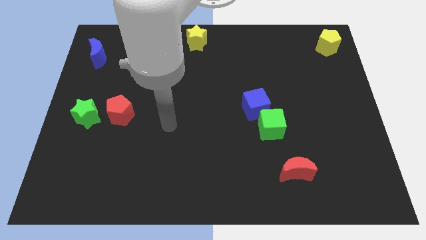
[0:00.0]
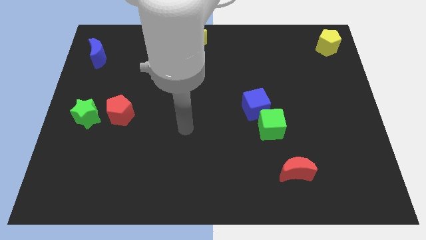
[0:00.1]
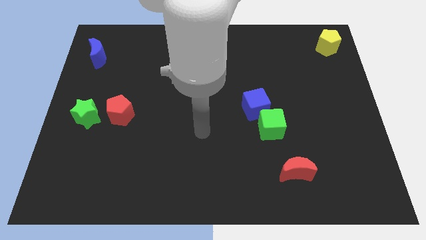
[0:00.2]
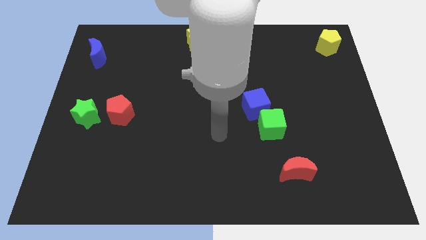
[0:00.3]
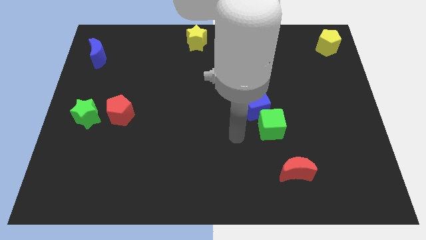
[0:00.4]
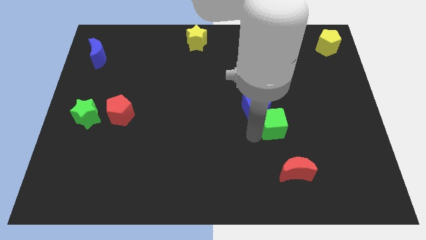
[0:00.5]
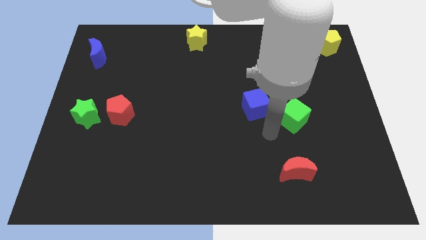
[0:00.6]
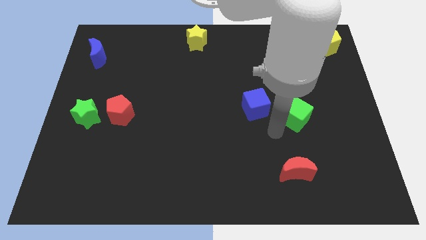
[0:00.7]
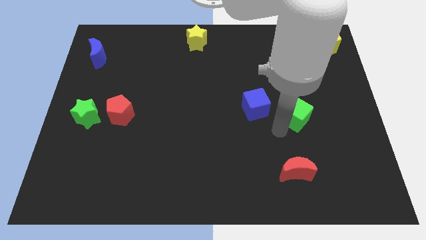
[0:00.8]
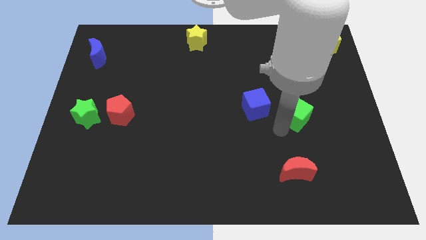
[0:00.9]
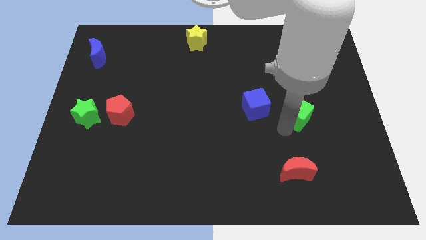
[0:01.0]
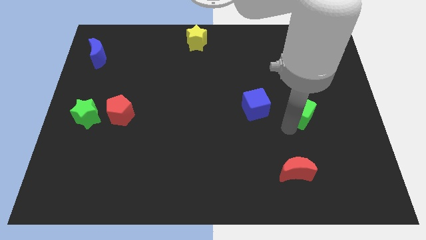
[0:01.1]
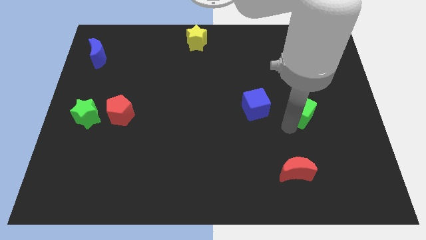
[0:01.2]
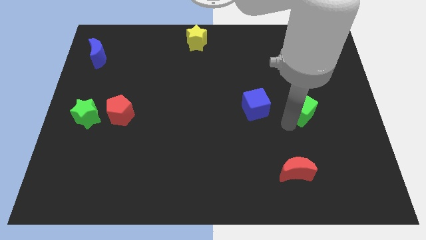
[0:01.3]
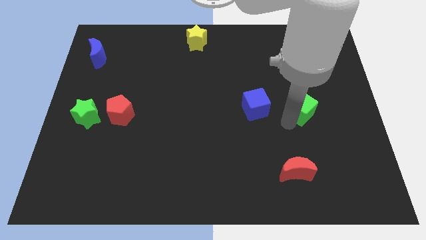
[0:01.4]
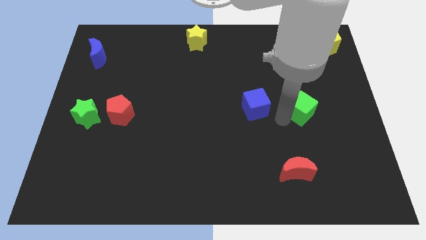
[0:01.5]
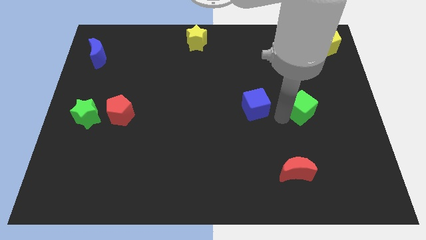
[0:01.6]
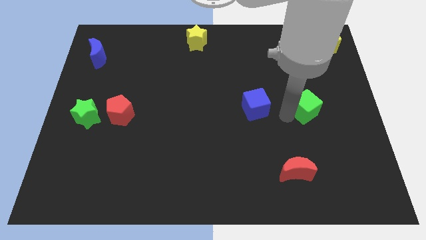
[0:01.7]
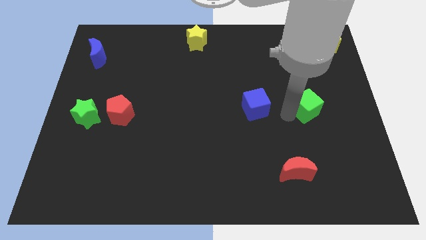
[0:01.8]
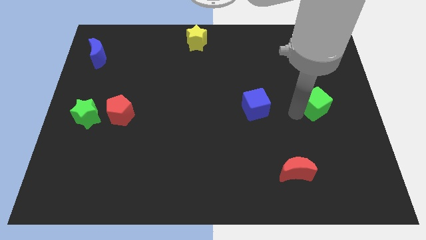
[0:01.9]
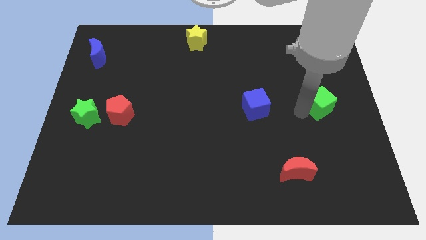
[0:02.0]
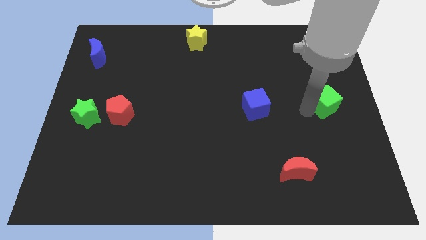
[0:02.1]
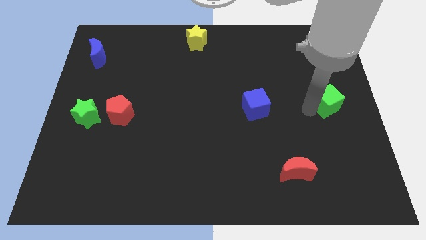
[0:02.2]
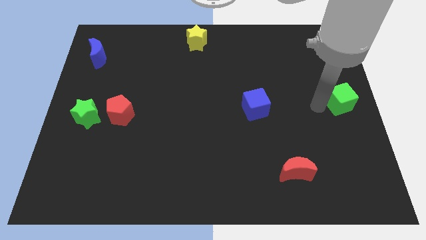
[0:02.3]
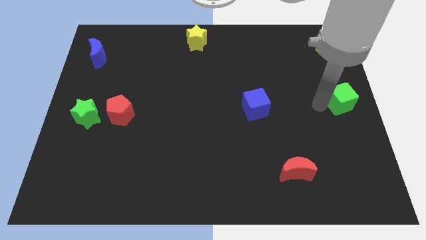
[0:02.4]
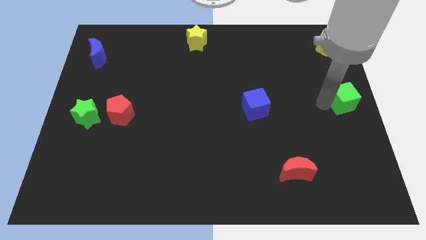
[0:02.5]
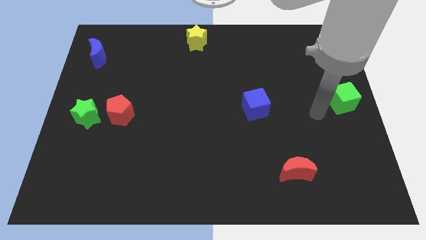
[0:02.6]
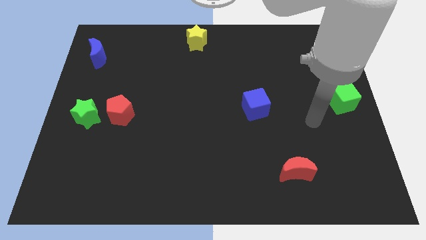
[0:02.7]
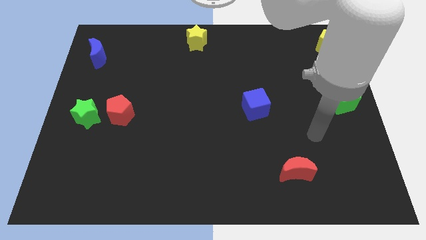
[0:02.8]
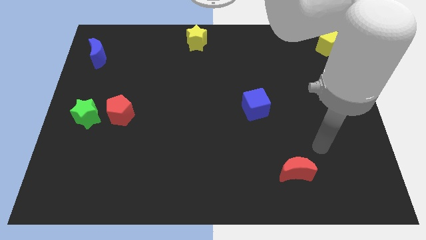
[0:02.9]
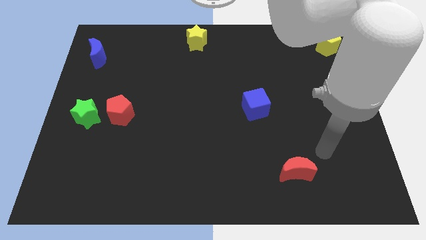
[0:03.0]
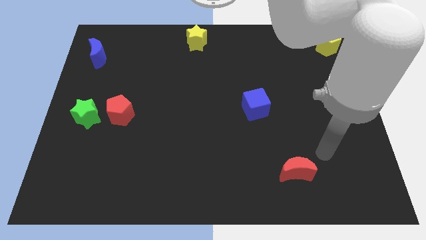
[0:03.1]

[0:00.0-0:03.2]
separate green cube from the blue cube

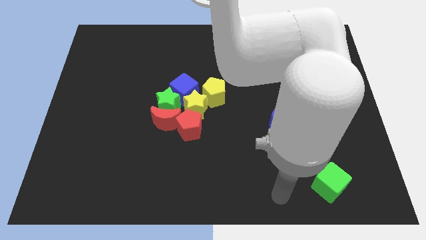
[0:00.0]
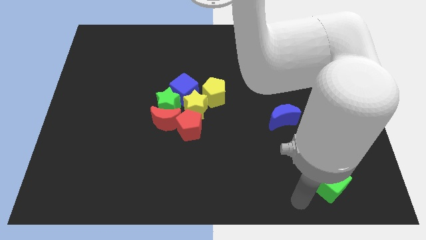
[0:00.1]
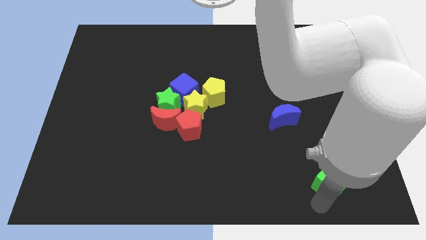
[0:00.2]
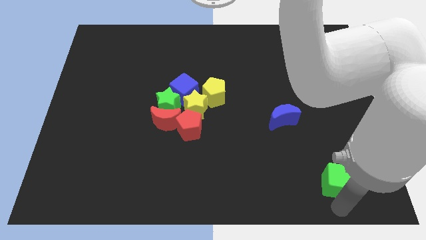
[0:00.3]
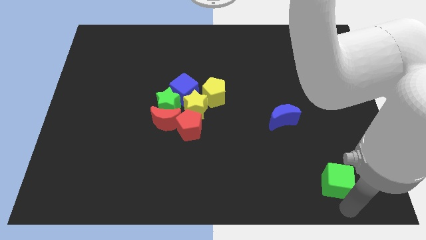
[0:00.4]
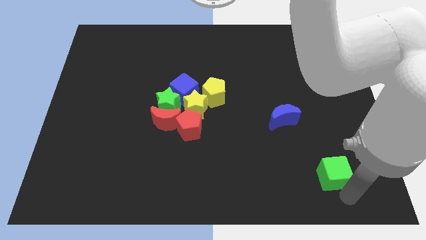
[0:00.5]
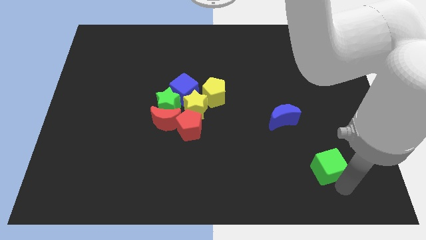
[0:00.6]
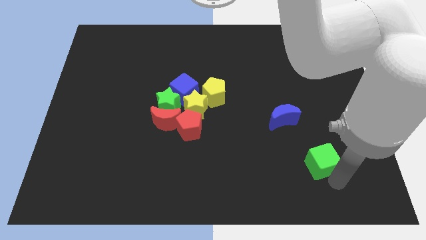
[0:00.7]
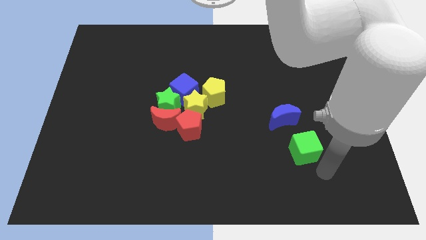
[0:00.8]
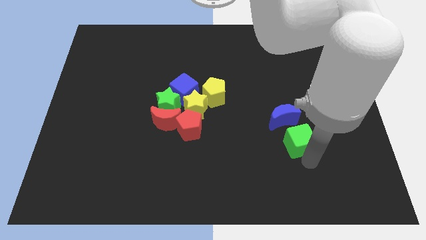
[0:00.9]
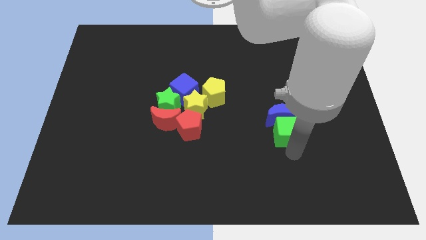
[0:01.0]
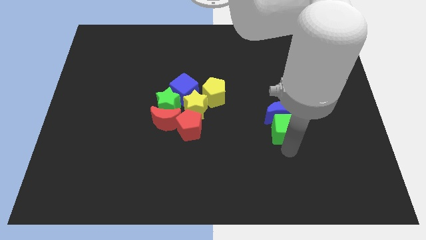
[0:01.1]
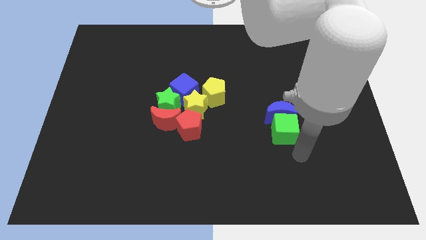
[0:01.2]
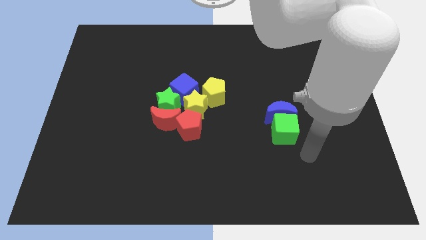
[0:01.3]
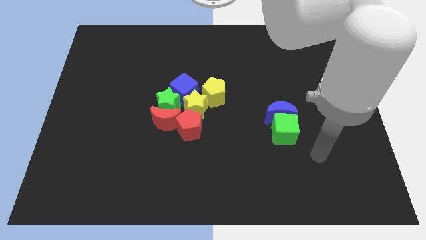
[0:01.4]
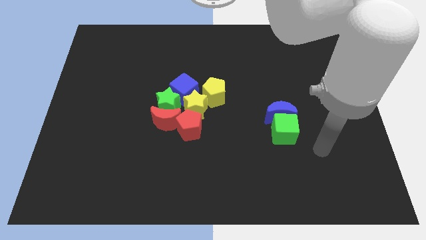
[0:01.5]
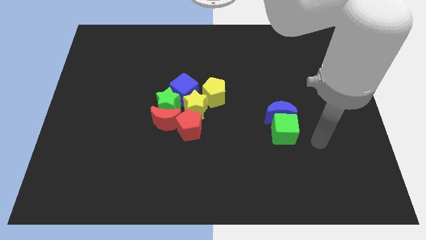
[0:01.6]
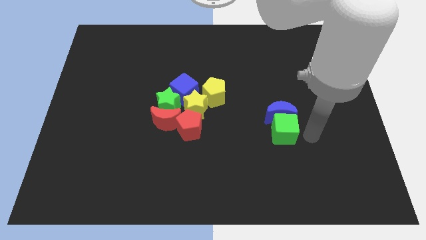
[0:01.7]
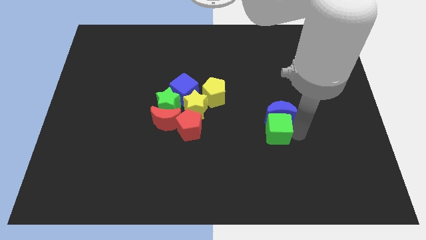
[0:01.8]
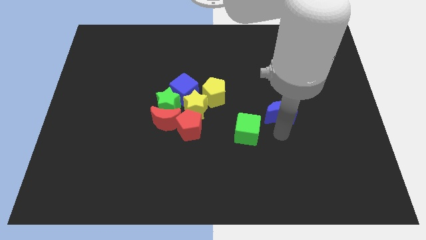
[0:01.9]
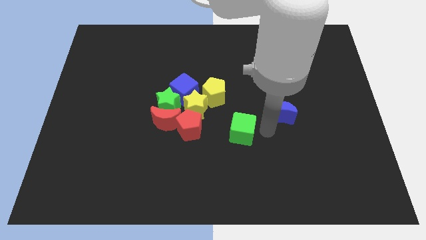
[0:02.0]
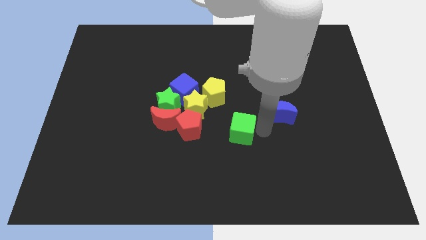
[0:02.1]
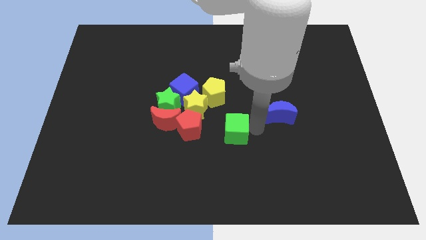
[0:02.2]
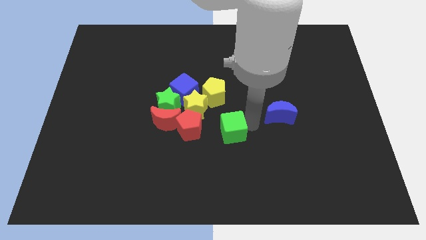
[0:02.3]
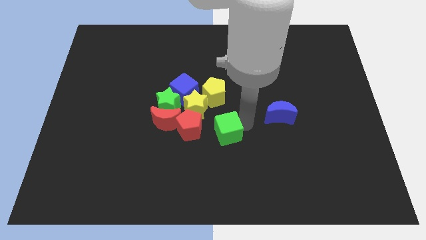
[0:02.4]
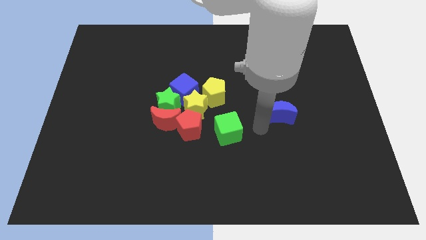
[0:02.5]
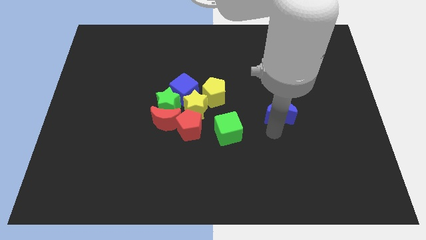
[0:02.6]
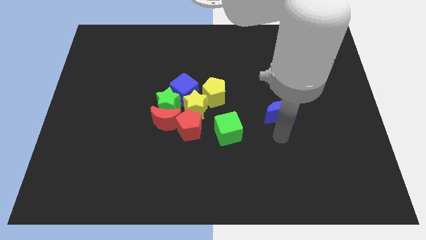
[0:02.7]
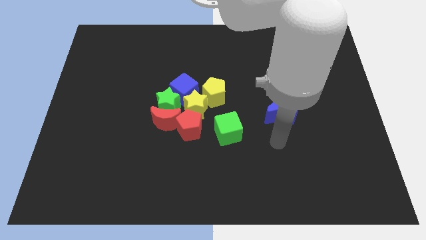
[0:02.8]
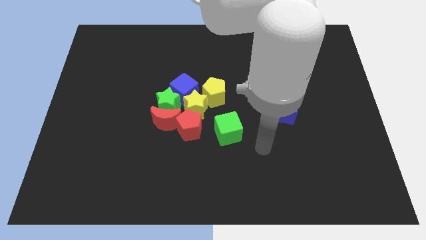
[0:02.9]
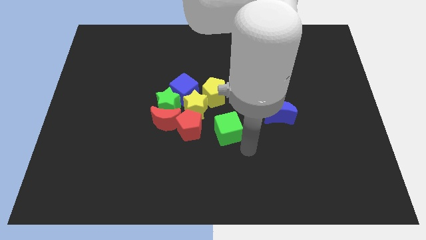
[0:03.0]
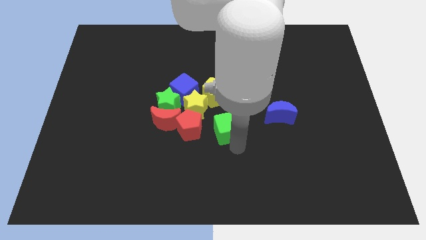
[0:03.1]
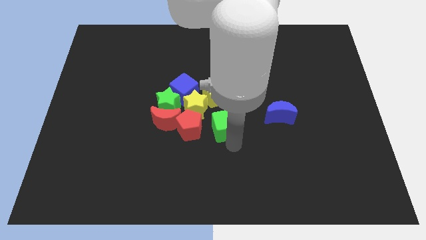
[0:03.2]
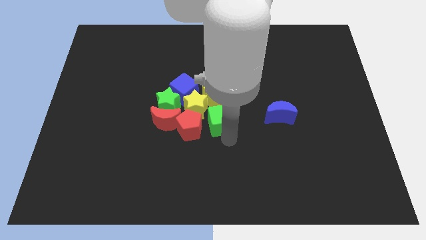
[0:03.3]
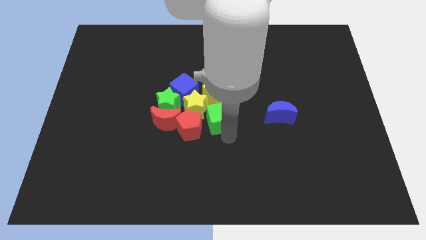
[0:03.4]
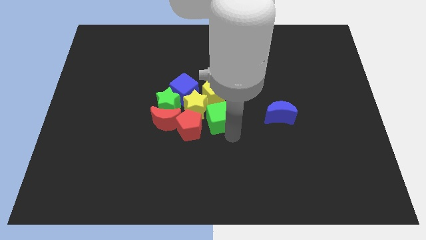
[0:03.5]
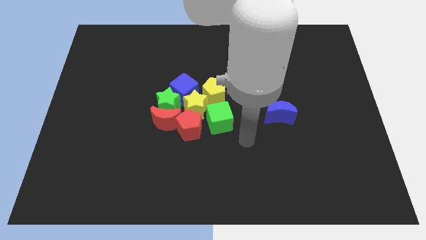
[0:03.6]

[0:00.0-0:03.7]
move the green cube to the right of the red pentagon

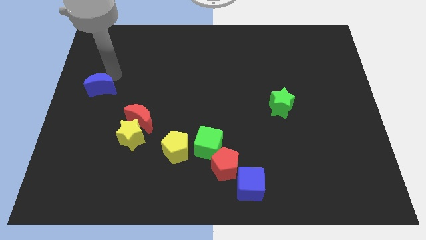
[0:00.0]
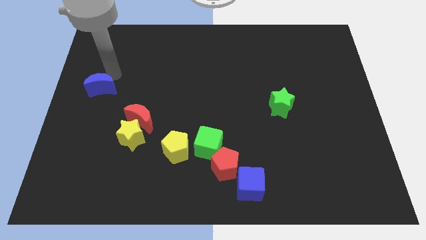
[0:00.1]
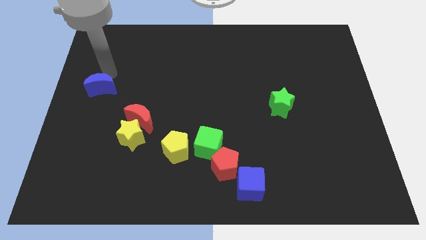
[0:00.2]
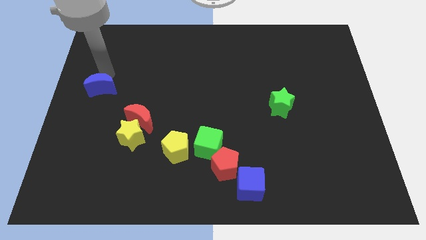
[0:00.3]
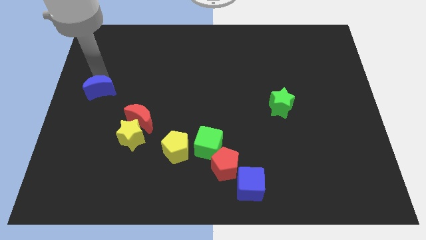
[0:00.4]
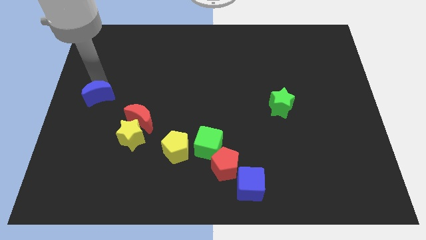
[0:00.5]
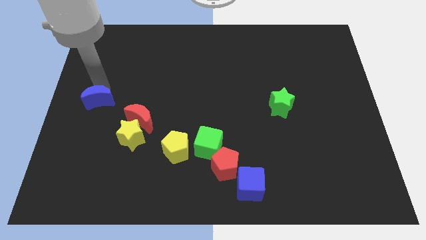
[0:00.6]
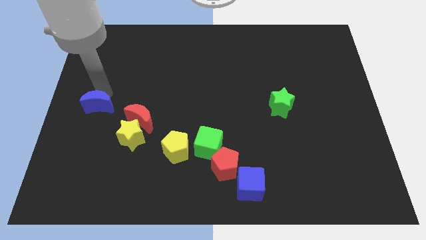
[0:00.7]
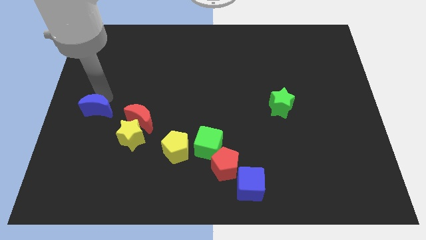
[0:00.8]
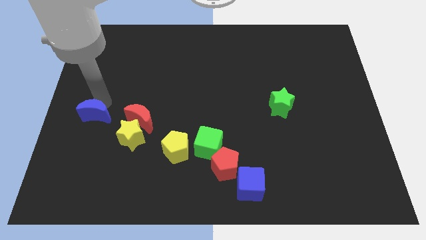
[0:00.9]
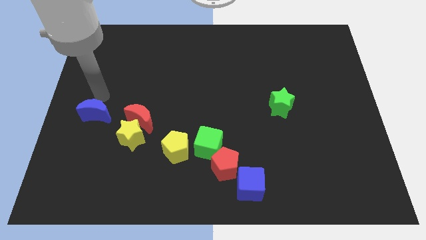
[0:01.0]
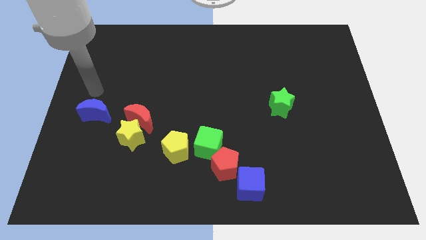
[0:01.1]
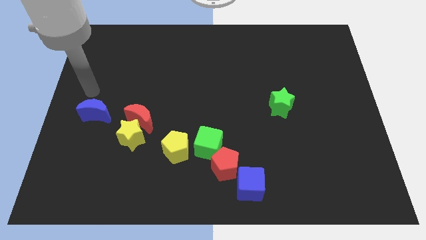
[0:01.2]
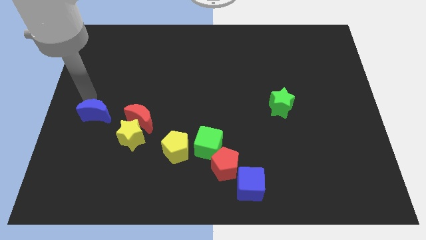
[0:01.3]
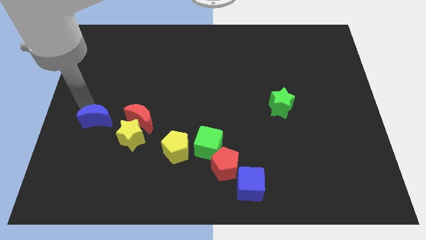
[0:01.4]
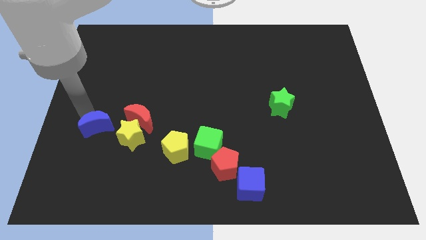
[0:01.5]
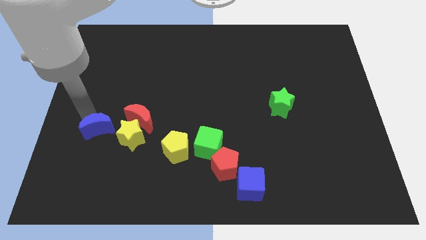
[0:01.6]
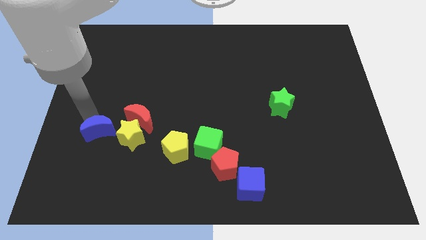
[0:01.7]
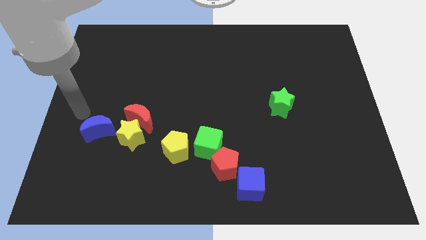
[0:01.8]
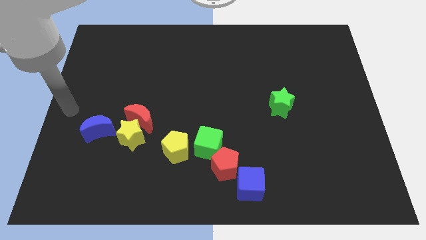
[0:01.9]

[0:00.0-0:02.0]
push the blue crescent to the left of the yellow star
